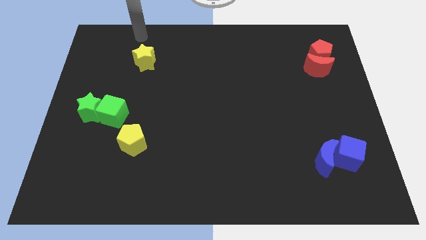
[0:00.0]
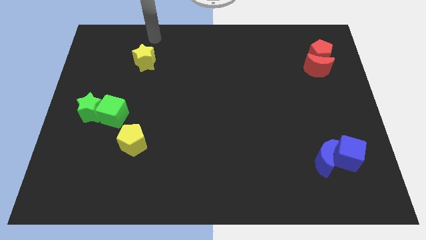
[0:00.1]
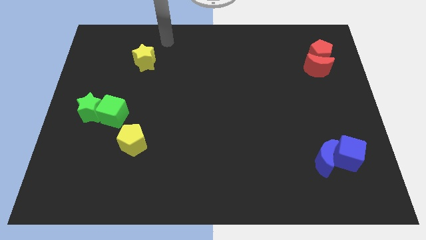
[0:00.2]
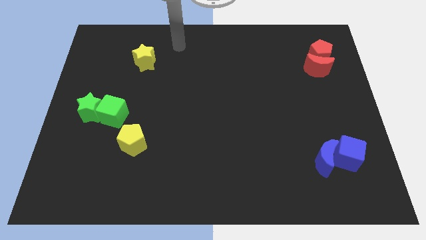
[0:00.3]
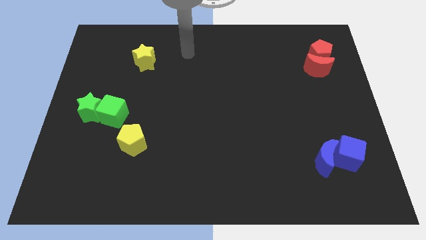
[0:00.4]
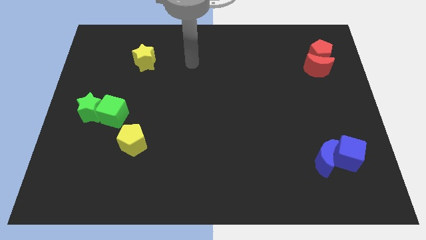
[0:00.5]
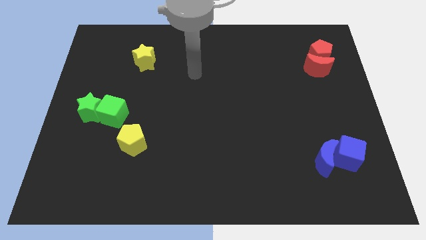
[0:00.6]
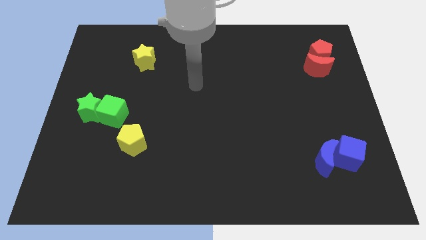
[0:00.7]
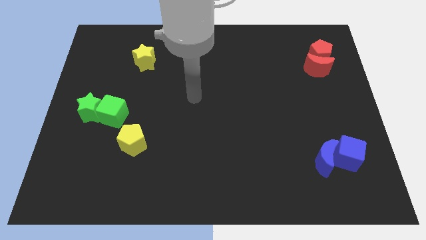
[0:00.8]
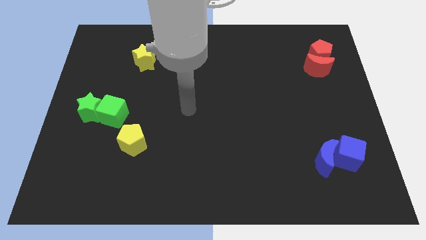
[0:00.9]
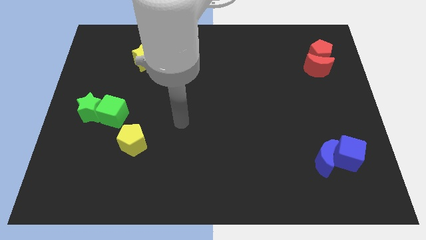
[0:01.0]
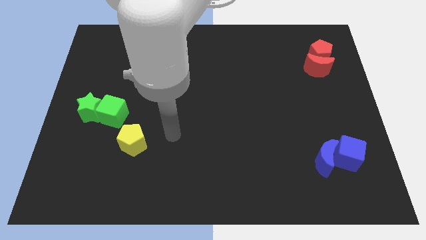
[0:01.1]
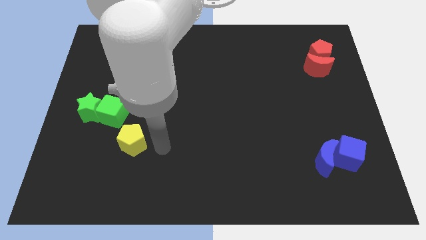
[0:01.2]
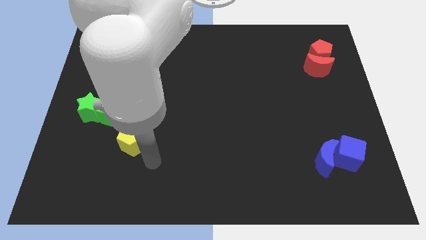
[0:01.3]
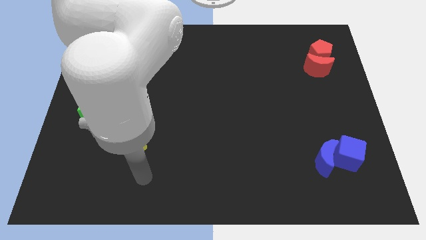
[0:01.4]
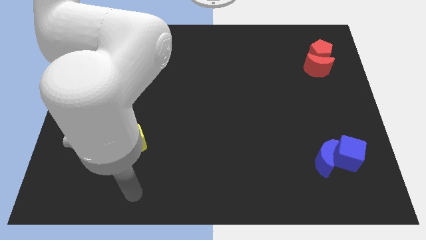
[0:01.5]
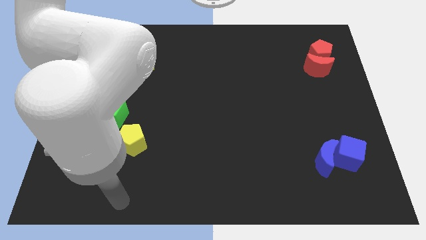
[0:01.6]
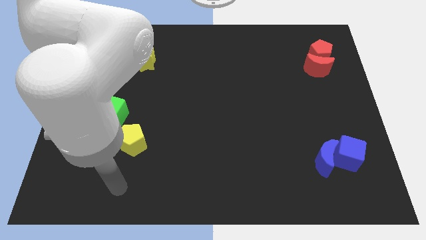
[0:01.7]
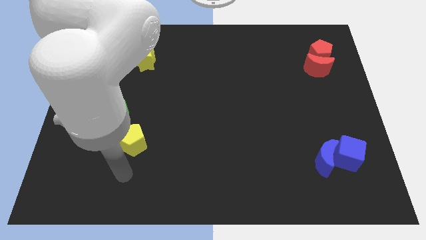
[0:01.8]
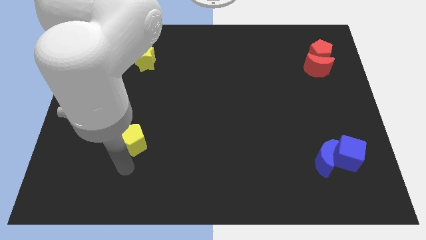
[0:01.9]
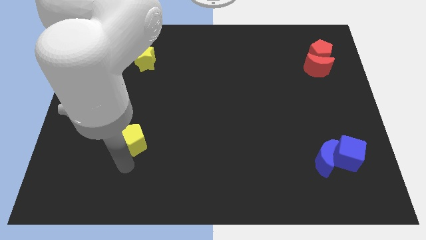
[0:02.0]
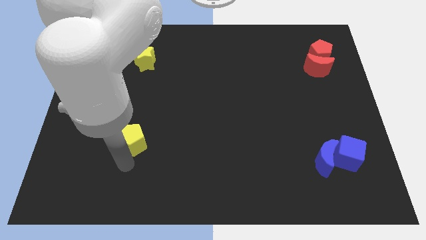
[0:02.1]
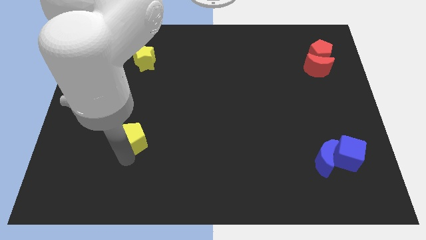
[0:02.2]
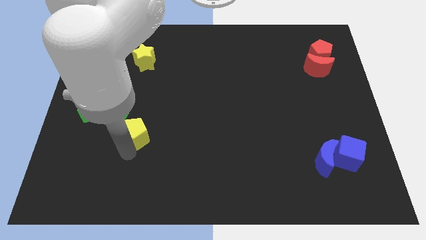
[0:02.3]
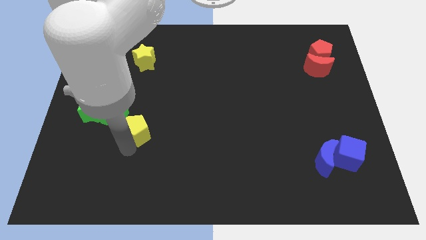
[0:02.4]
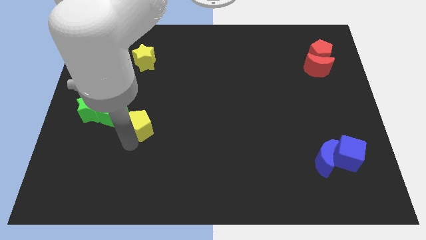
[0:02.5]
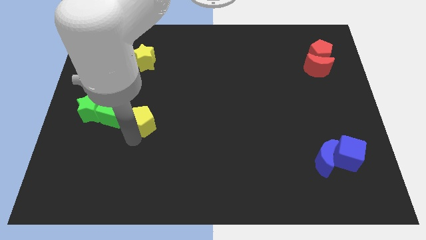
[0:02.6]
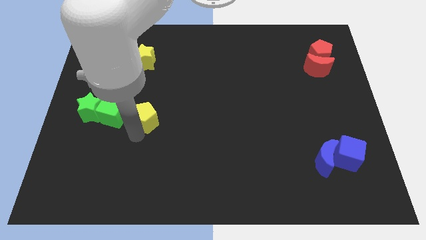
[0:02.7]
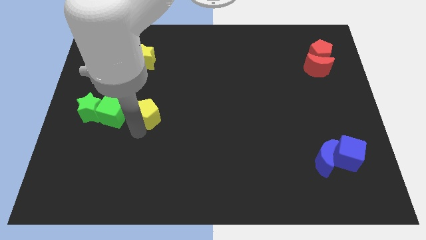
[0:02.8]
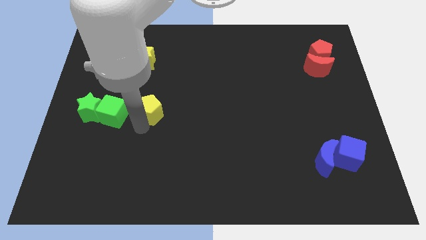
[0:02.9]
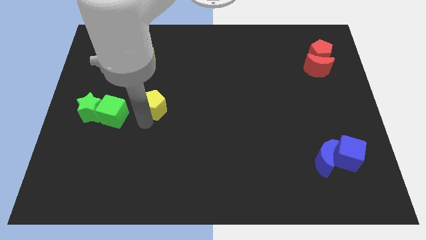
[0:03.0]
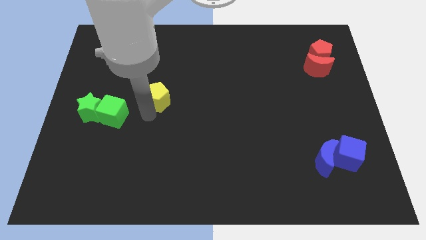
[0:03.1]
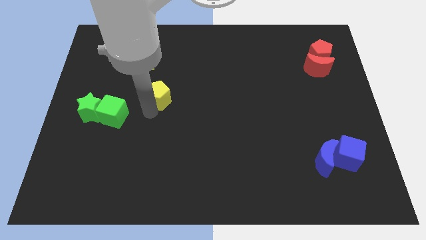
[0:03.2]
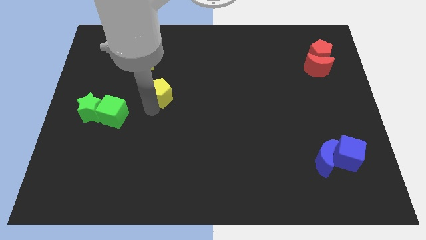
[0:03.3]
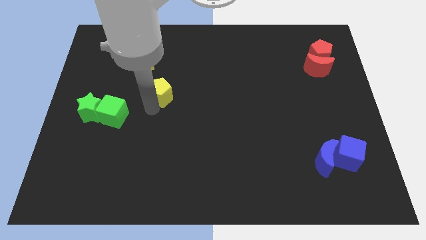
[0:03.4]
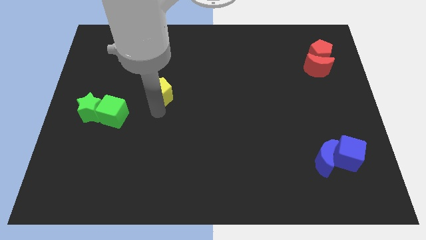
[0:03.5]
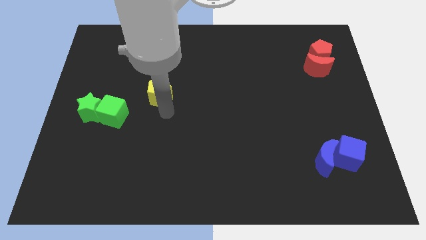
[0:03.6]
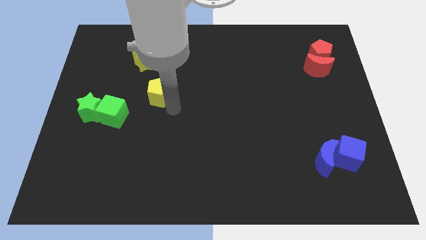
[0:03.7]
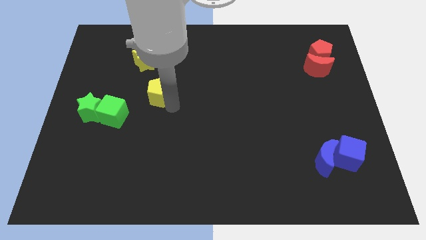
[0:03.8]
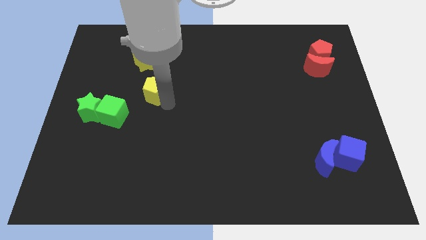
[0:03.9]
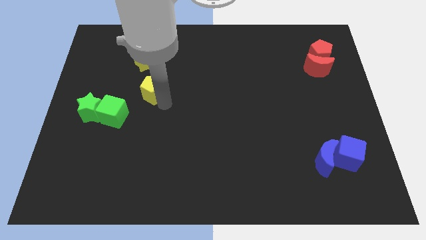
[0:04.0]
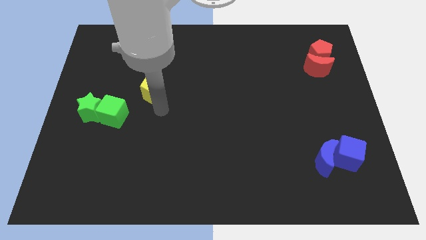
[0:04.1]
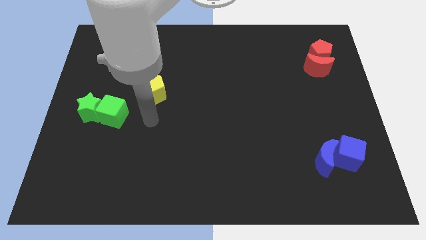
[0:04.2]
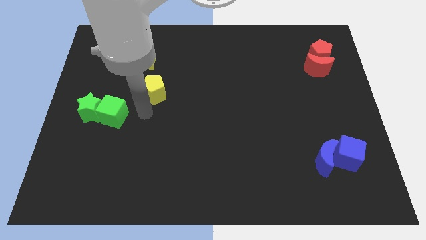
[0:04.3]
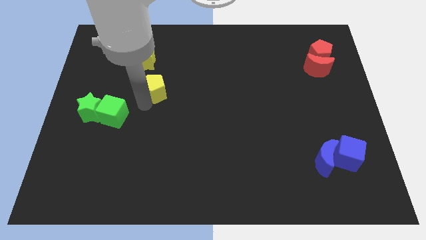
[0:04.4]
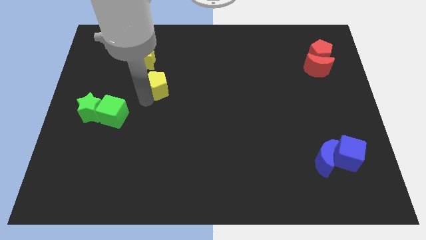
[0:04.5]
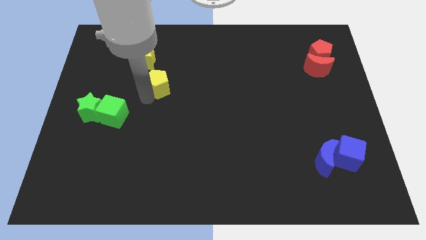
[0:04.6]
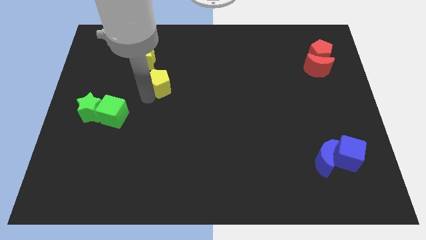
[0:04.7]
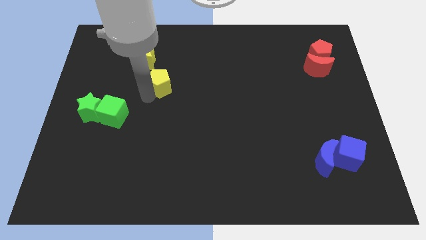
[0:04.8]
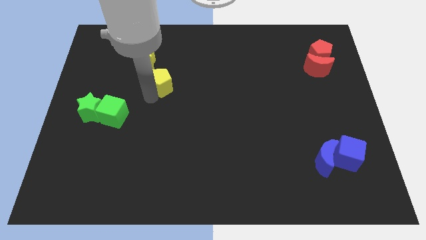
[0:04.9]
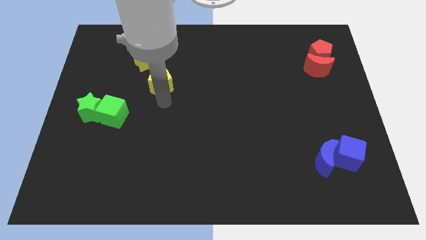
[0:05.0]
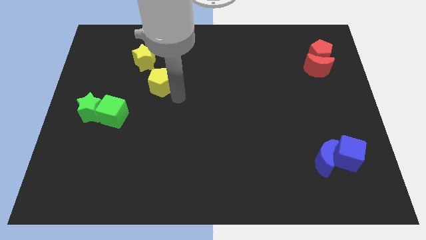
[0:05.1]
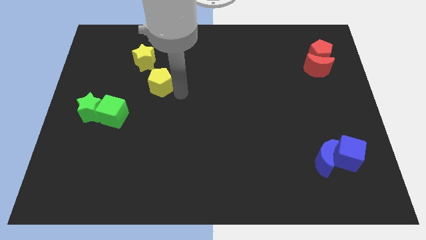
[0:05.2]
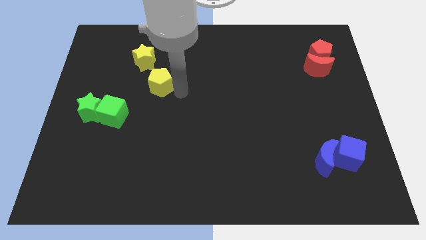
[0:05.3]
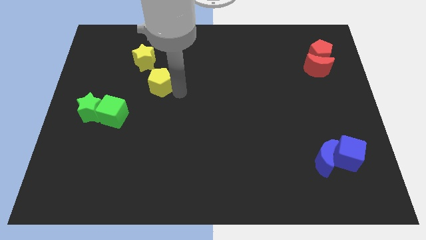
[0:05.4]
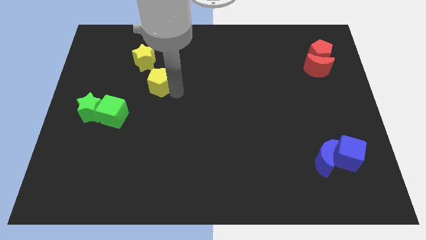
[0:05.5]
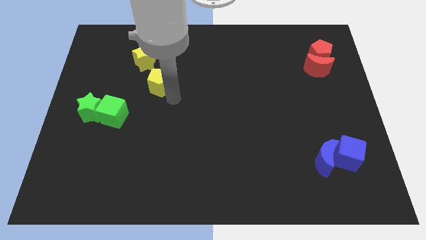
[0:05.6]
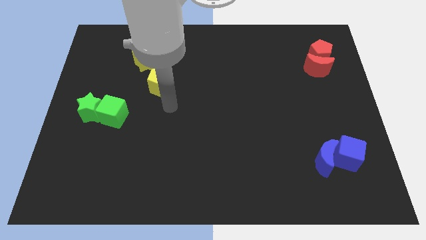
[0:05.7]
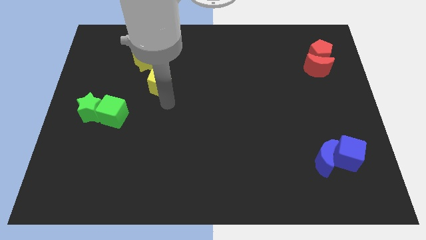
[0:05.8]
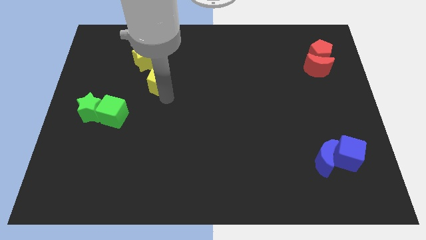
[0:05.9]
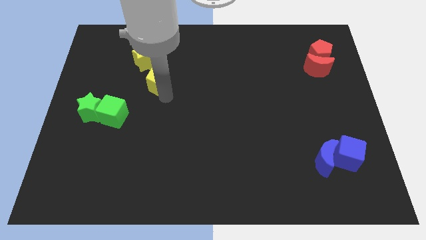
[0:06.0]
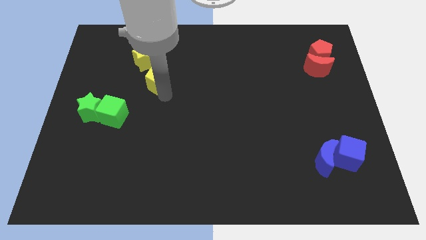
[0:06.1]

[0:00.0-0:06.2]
place the yellow pentagon diagonally below the bottom right of the yellow star

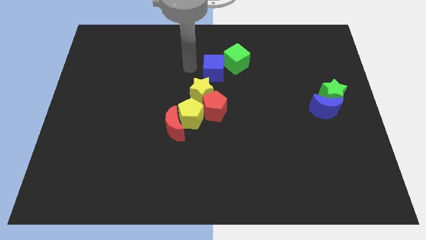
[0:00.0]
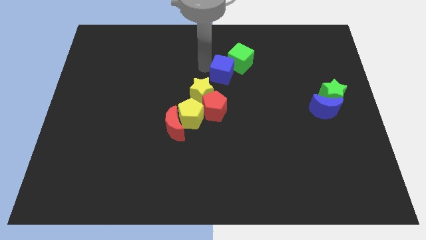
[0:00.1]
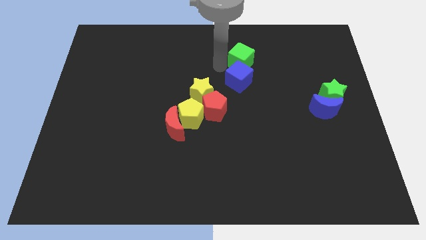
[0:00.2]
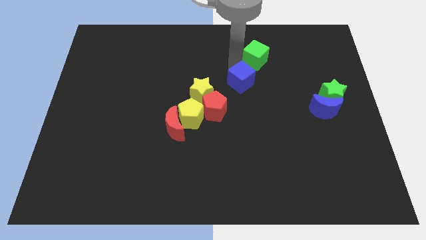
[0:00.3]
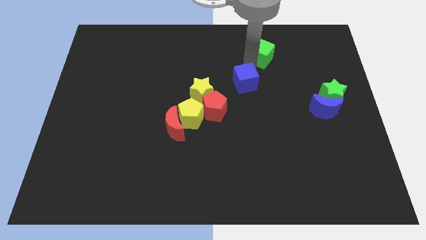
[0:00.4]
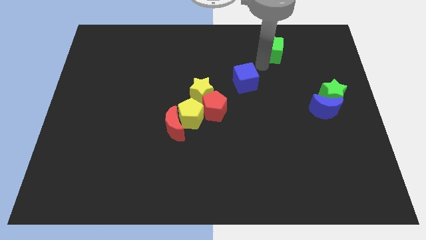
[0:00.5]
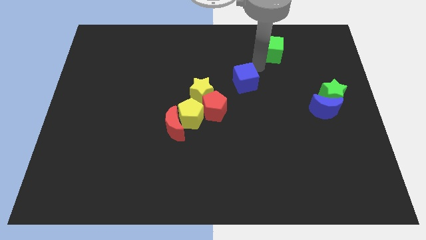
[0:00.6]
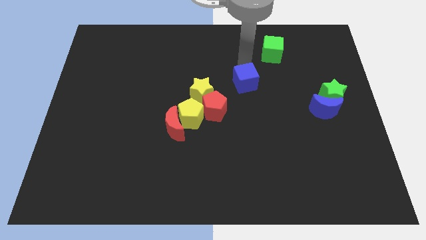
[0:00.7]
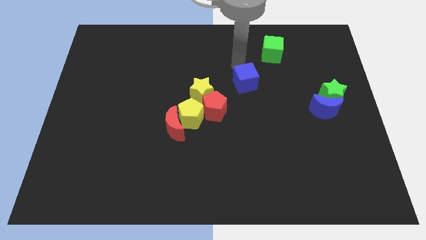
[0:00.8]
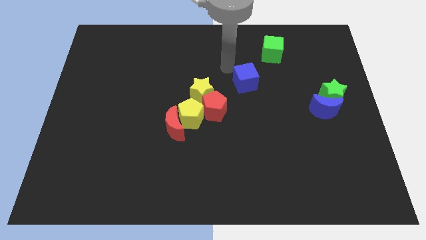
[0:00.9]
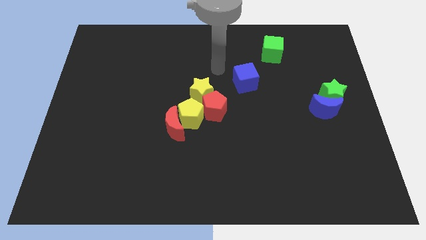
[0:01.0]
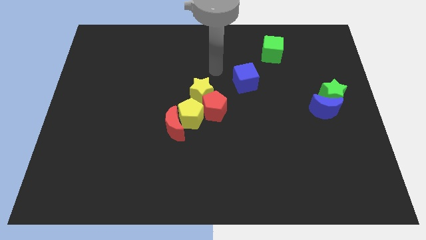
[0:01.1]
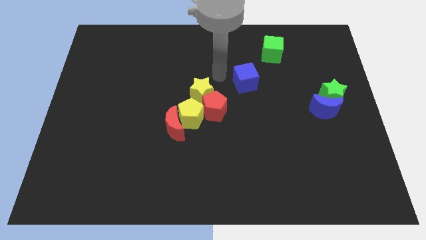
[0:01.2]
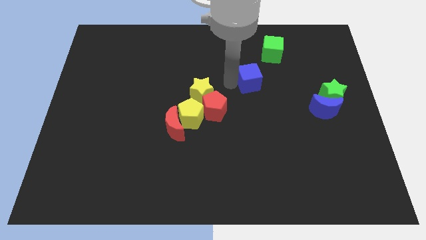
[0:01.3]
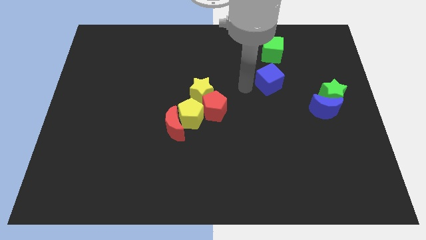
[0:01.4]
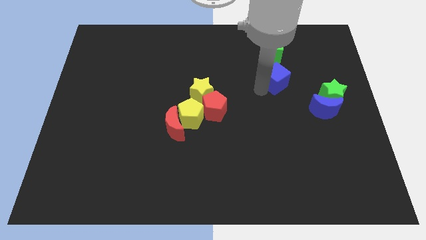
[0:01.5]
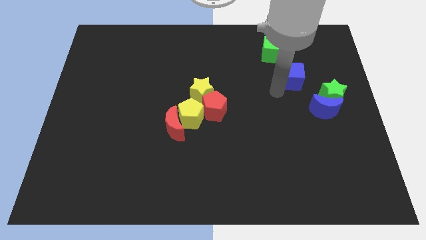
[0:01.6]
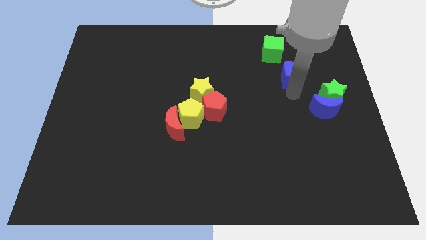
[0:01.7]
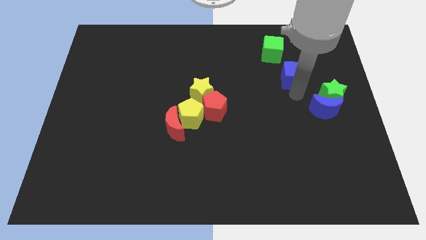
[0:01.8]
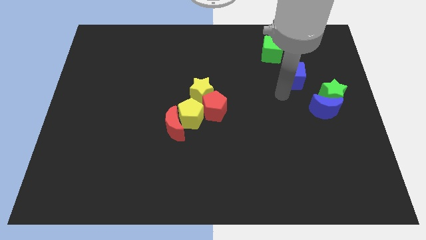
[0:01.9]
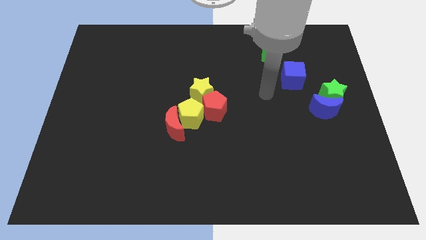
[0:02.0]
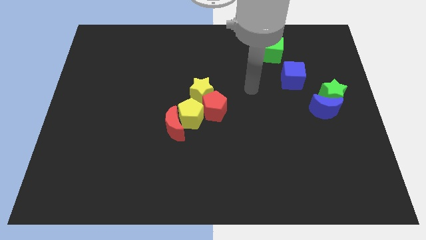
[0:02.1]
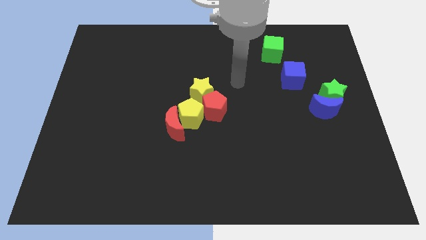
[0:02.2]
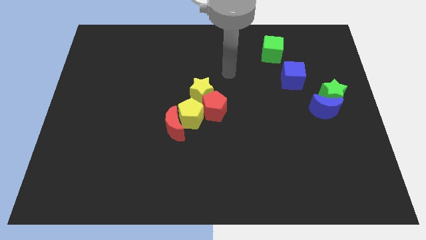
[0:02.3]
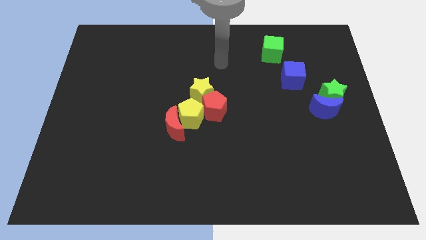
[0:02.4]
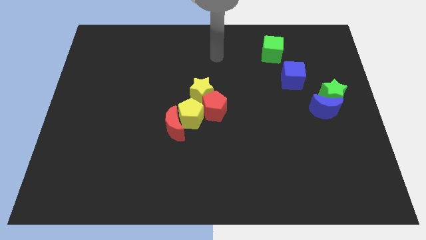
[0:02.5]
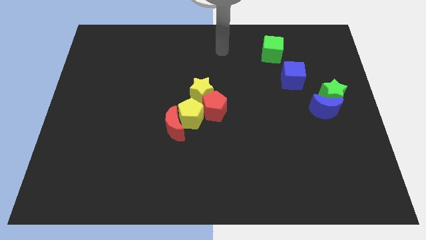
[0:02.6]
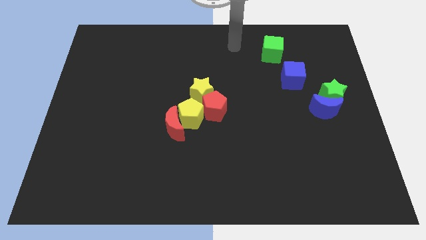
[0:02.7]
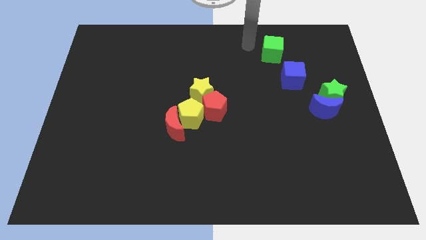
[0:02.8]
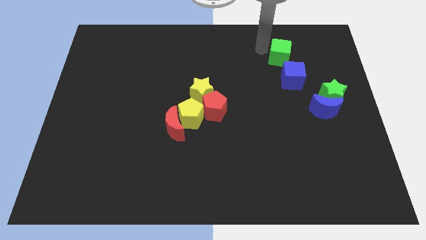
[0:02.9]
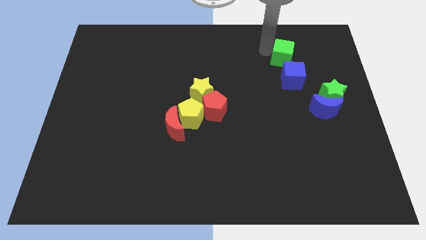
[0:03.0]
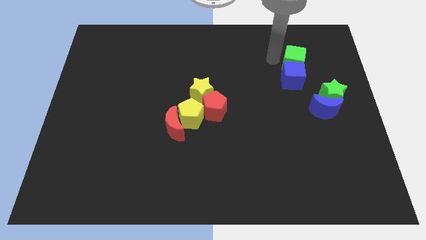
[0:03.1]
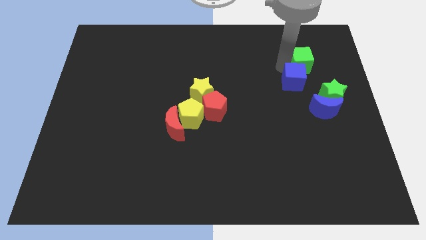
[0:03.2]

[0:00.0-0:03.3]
push the green cube along with blue cube to the top right on the board
